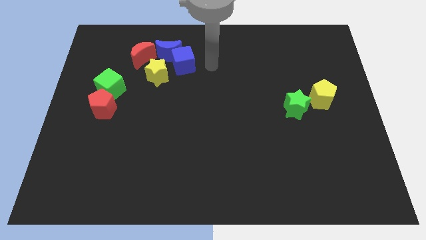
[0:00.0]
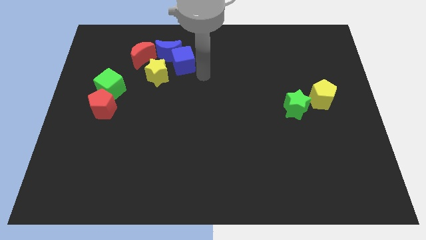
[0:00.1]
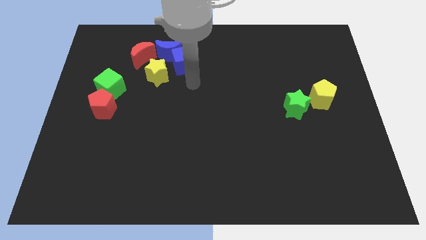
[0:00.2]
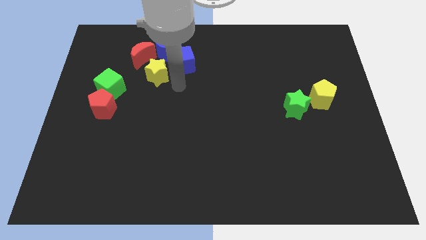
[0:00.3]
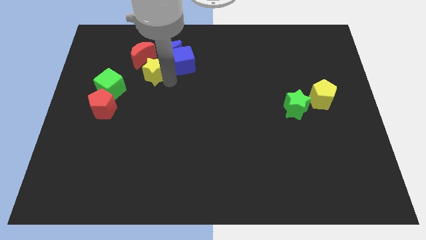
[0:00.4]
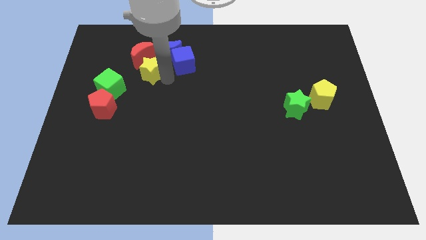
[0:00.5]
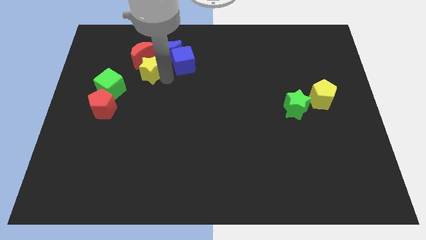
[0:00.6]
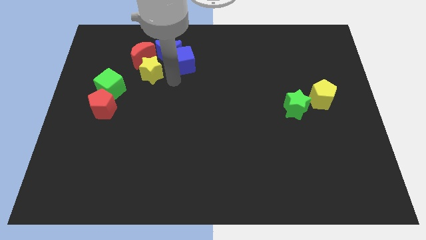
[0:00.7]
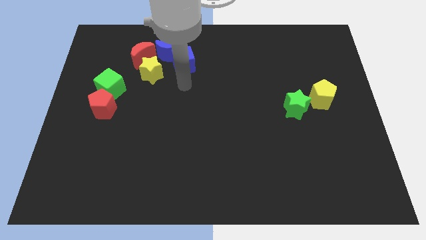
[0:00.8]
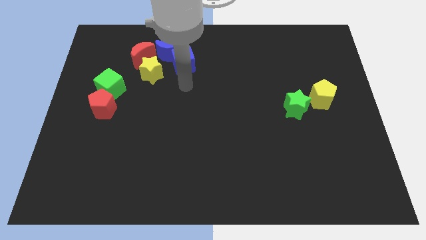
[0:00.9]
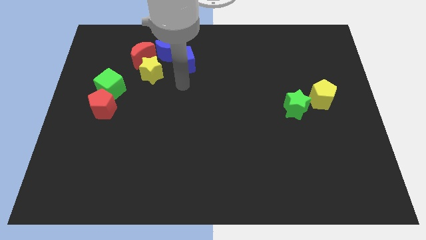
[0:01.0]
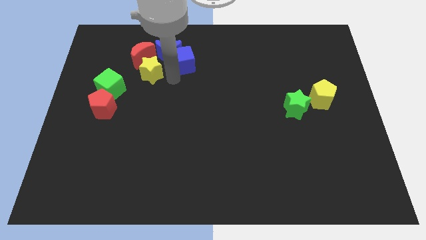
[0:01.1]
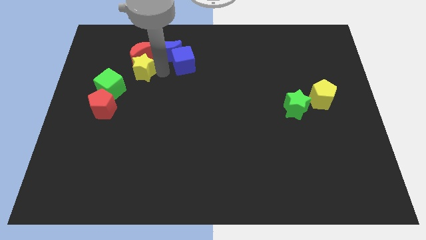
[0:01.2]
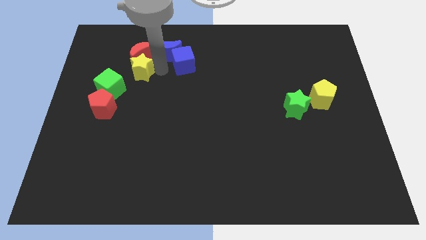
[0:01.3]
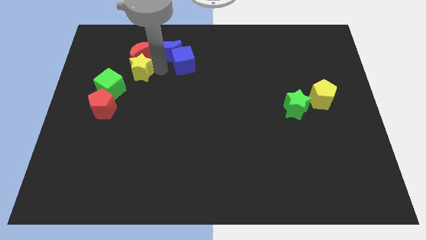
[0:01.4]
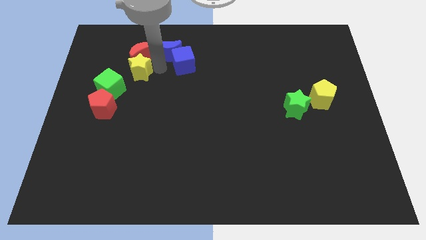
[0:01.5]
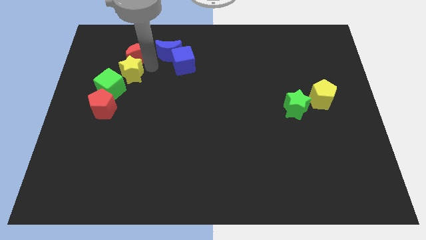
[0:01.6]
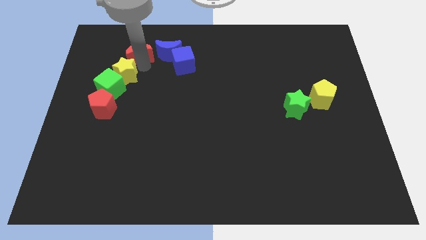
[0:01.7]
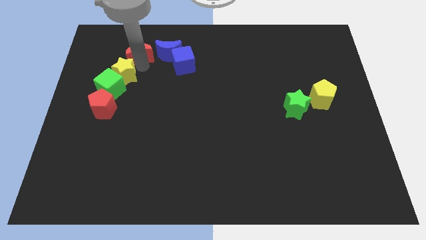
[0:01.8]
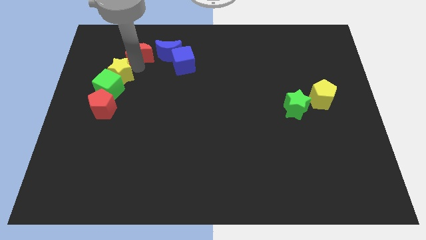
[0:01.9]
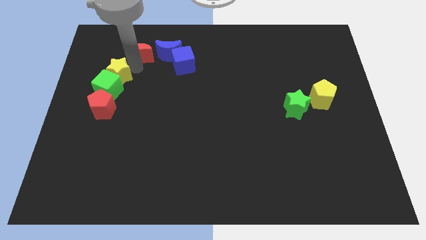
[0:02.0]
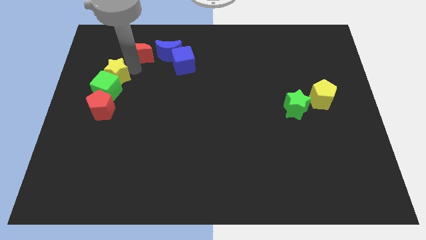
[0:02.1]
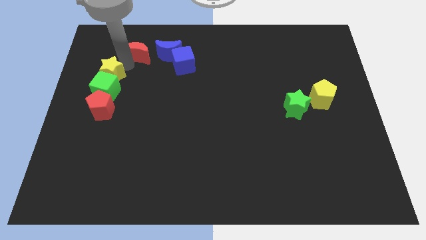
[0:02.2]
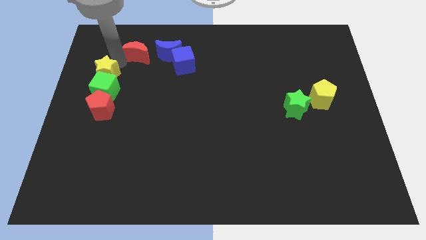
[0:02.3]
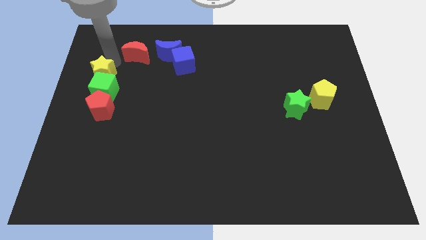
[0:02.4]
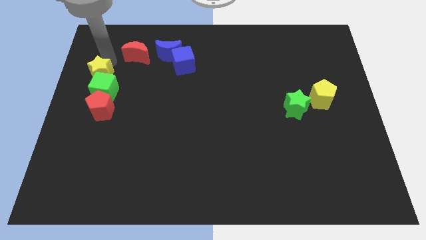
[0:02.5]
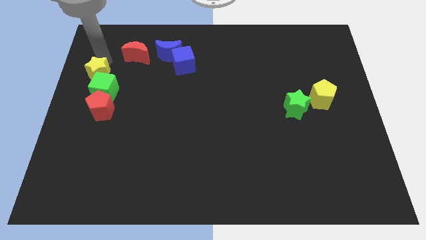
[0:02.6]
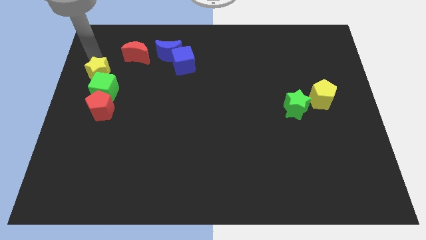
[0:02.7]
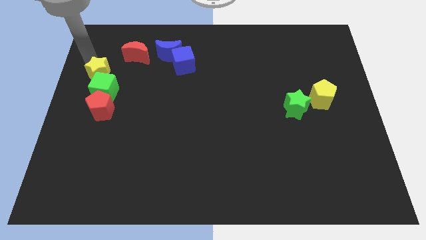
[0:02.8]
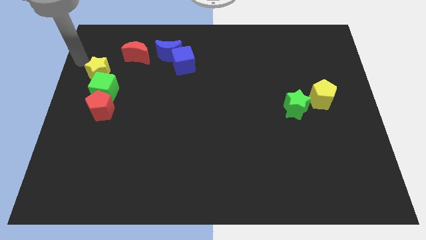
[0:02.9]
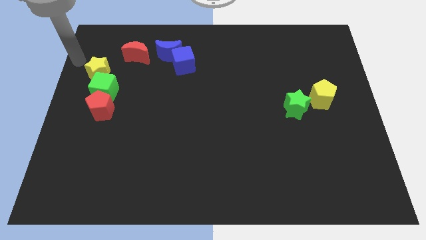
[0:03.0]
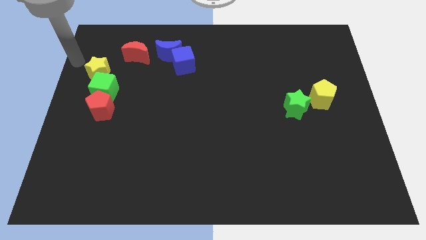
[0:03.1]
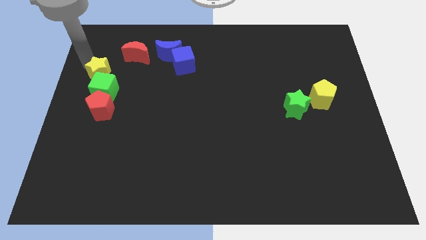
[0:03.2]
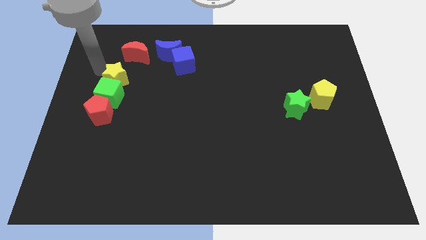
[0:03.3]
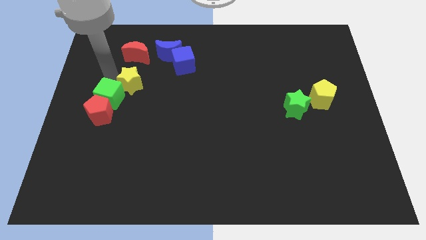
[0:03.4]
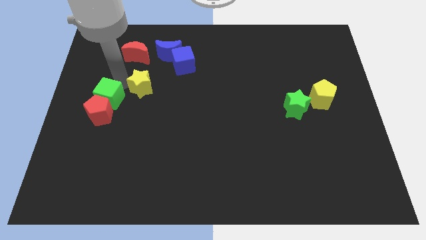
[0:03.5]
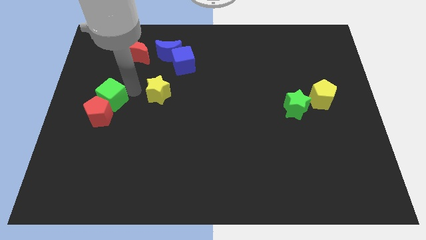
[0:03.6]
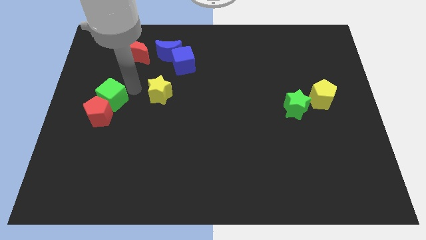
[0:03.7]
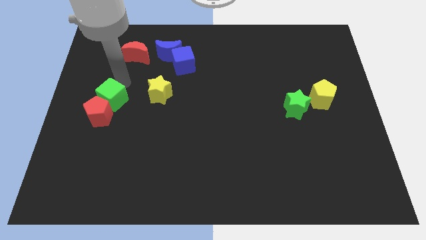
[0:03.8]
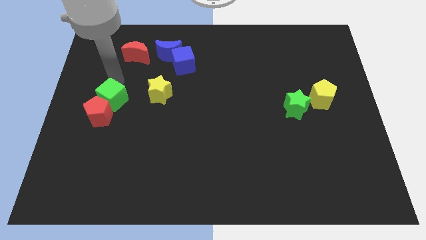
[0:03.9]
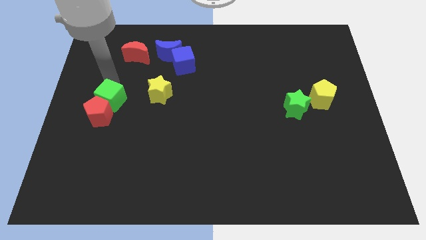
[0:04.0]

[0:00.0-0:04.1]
place the yellow star diagonal to the blue cube

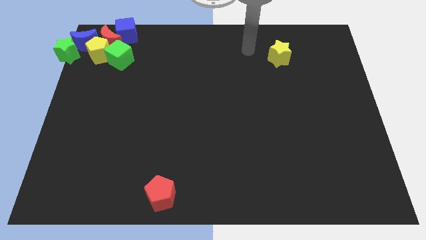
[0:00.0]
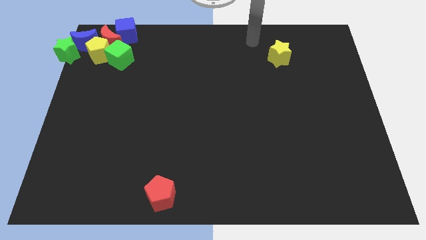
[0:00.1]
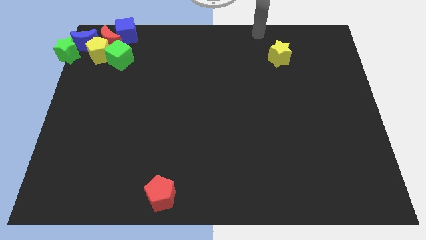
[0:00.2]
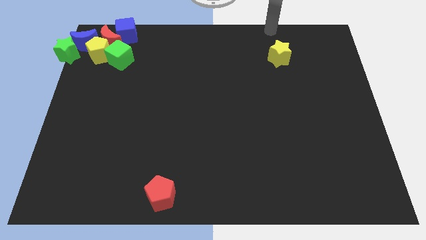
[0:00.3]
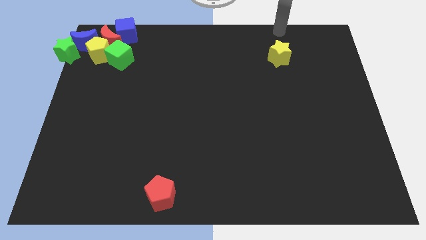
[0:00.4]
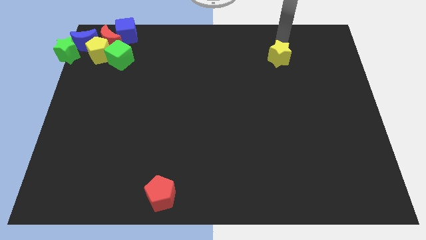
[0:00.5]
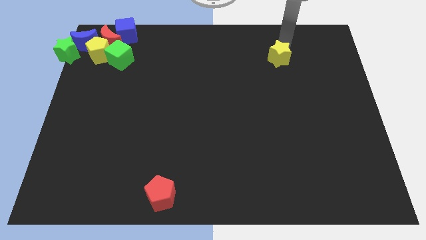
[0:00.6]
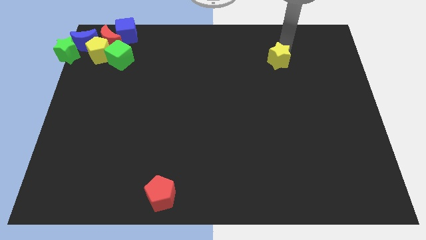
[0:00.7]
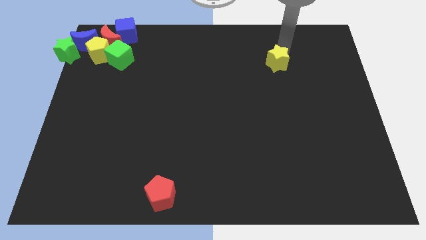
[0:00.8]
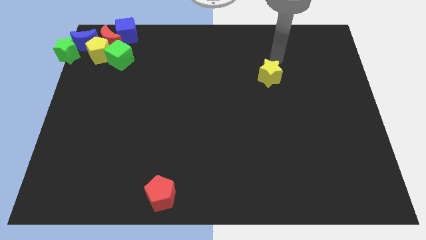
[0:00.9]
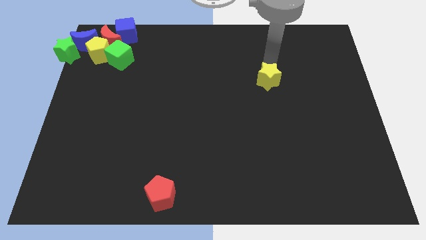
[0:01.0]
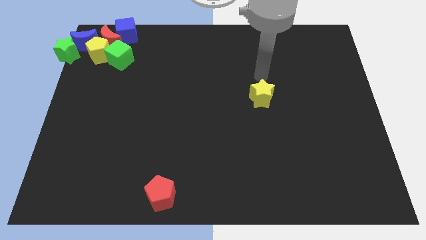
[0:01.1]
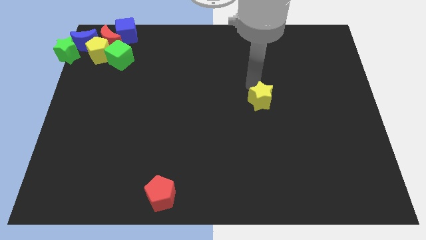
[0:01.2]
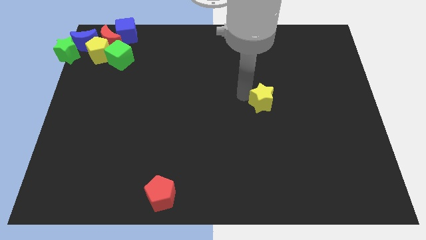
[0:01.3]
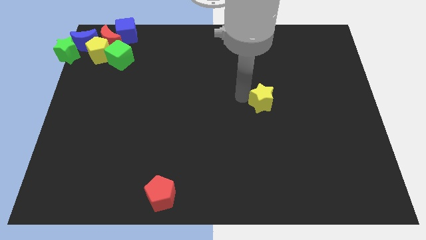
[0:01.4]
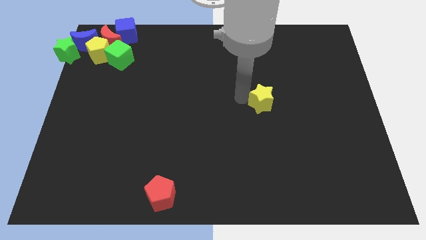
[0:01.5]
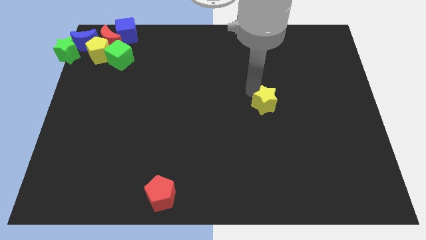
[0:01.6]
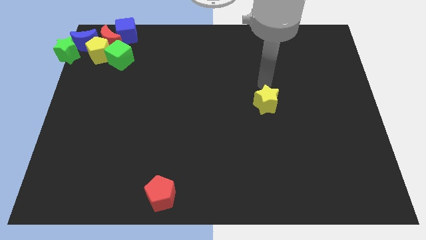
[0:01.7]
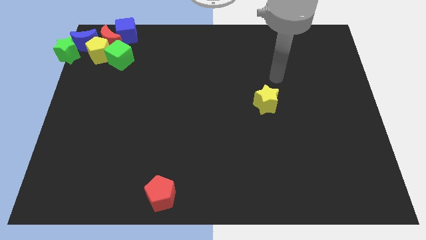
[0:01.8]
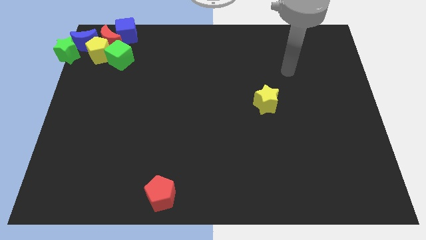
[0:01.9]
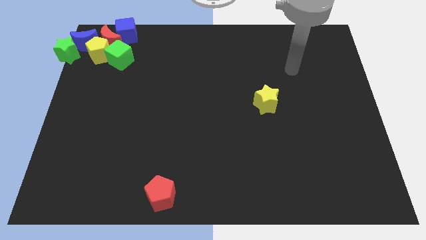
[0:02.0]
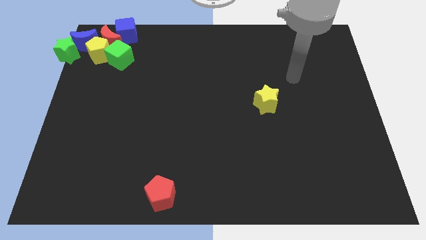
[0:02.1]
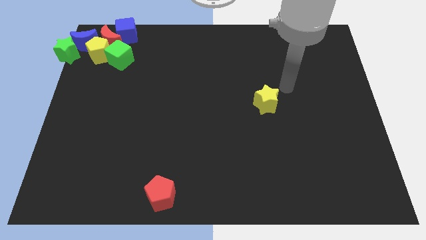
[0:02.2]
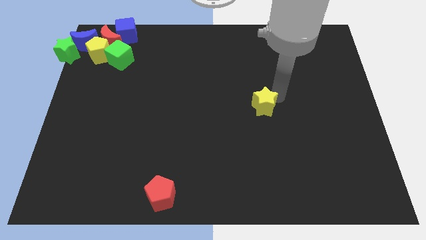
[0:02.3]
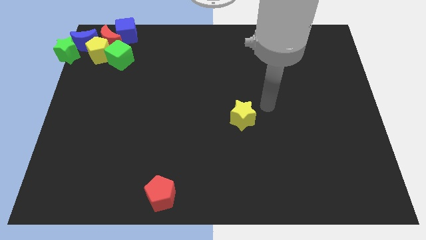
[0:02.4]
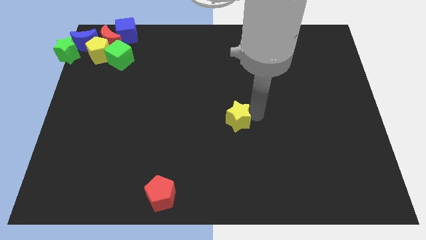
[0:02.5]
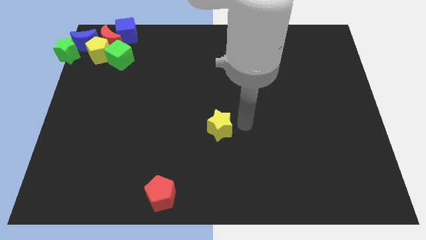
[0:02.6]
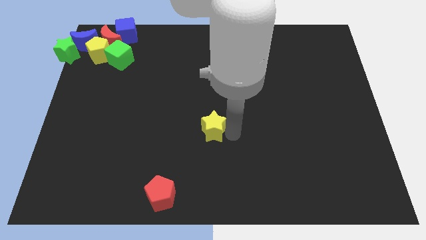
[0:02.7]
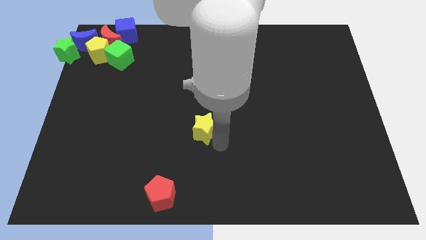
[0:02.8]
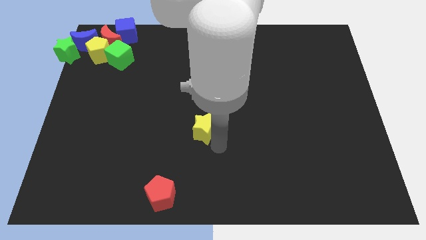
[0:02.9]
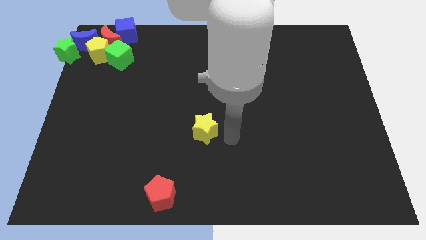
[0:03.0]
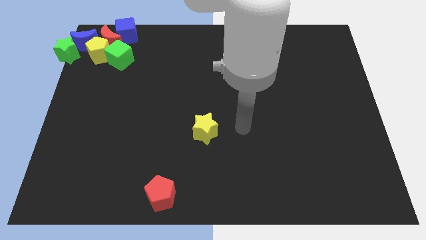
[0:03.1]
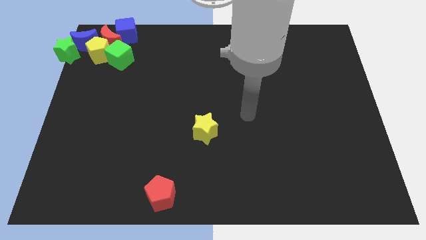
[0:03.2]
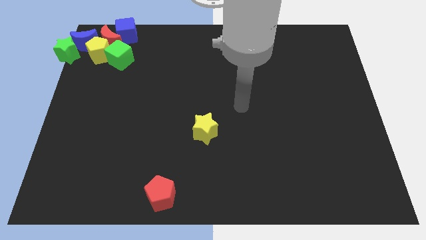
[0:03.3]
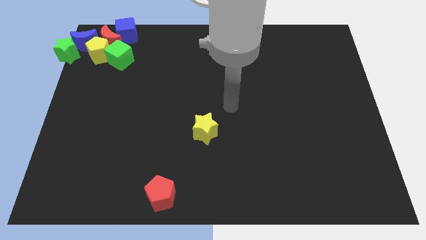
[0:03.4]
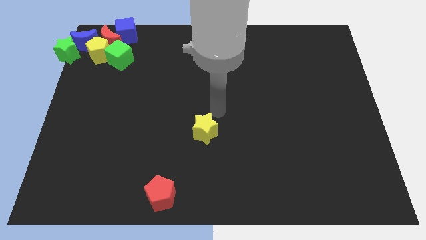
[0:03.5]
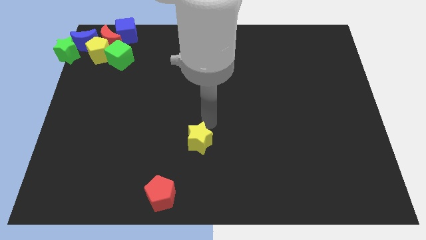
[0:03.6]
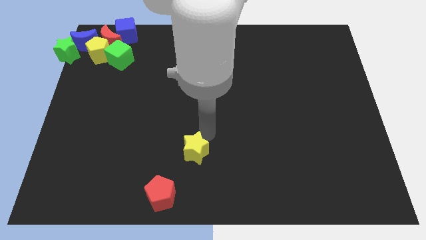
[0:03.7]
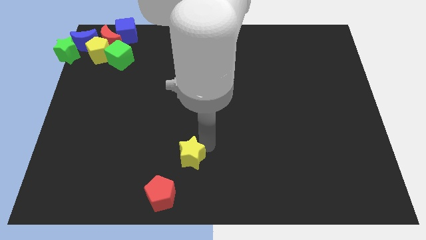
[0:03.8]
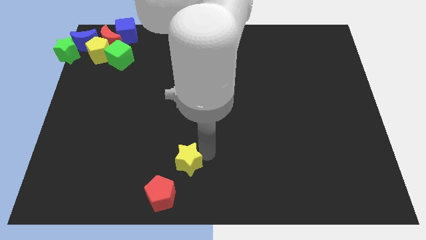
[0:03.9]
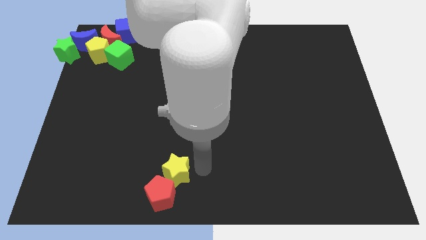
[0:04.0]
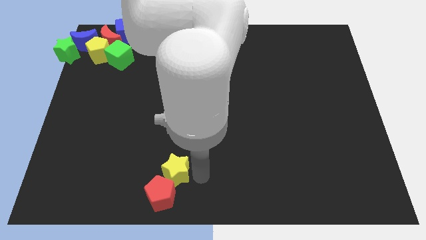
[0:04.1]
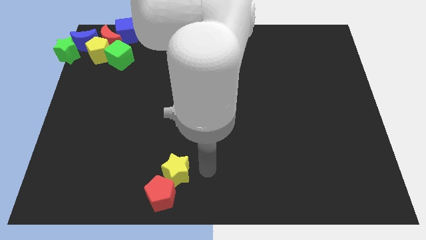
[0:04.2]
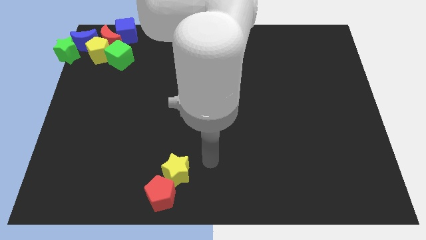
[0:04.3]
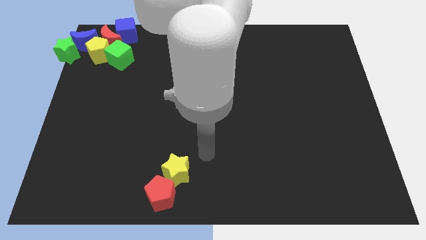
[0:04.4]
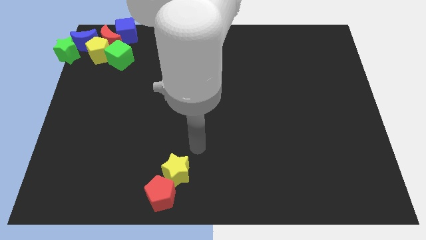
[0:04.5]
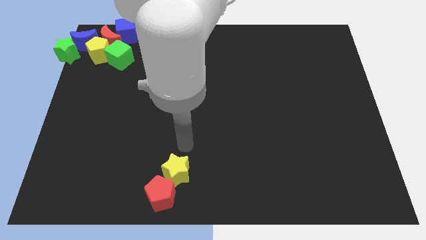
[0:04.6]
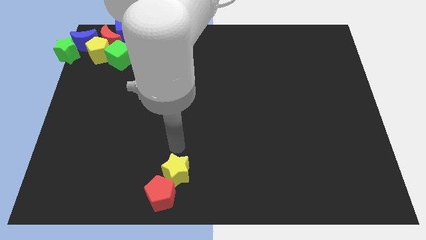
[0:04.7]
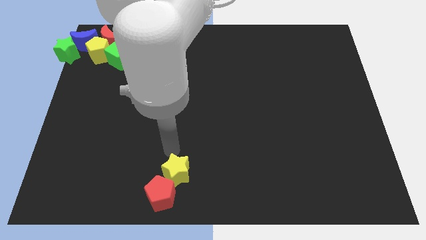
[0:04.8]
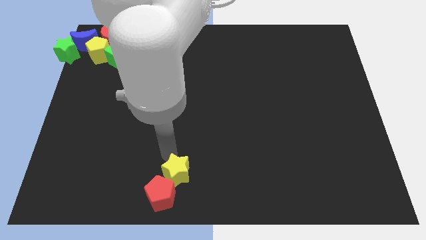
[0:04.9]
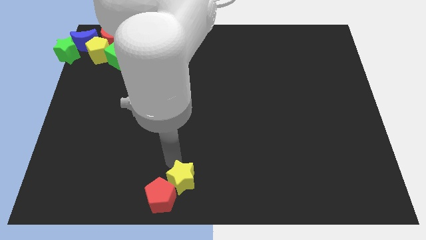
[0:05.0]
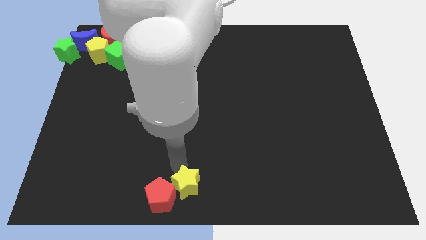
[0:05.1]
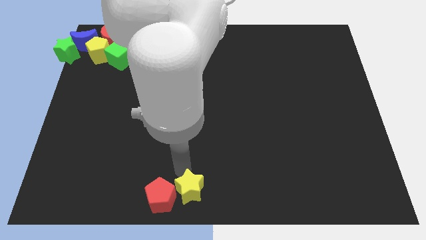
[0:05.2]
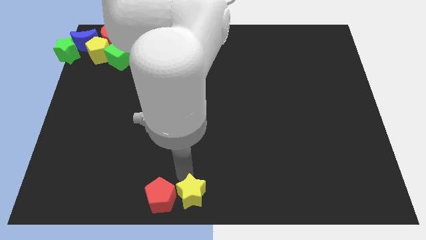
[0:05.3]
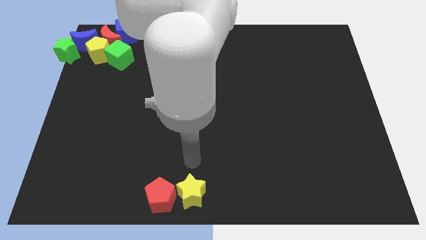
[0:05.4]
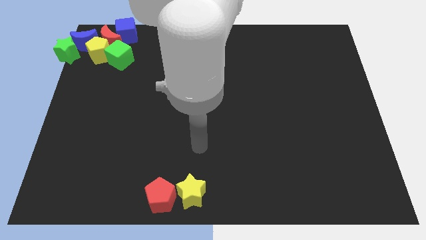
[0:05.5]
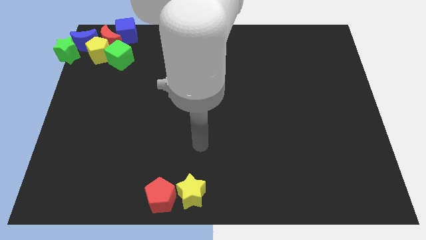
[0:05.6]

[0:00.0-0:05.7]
move the yellow star to the right side red pentagon
